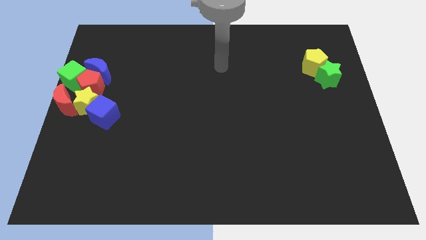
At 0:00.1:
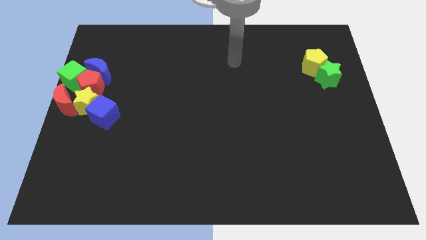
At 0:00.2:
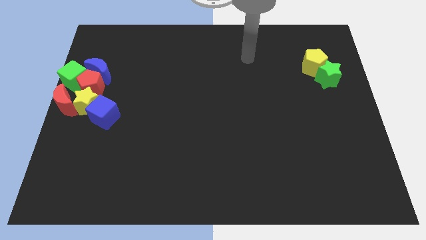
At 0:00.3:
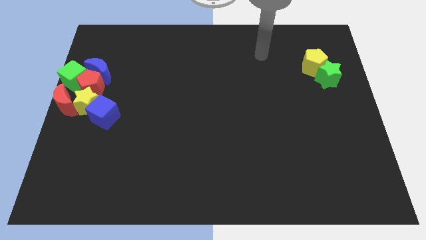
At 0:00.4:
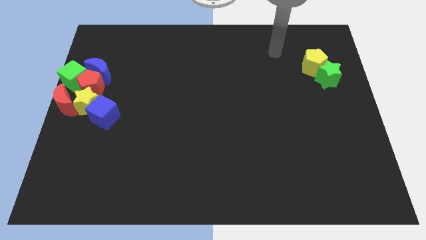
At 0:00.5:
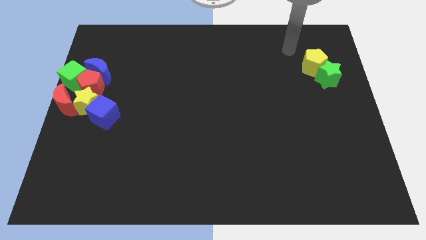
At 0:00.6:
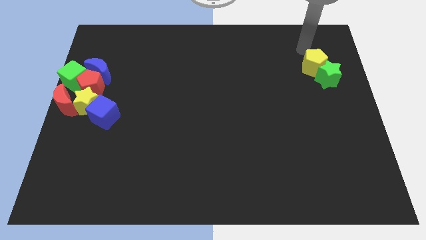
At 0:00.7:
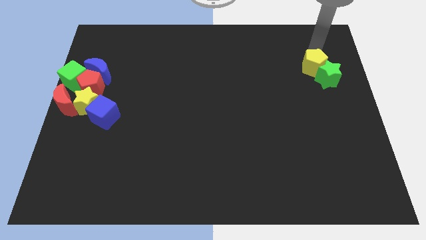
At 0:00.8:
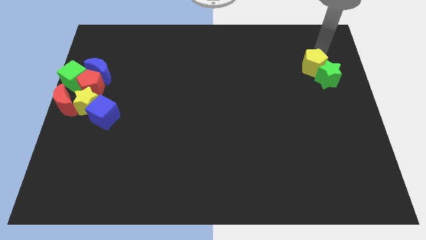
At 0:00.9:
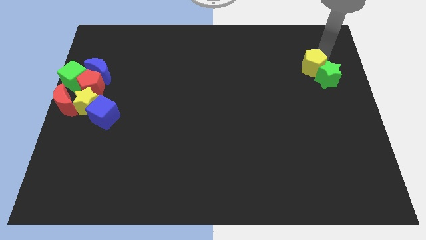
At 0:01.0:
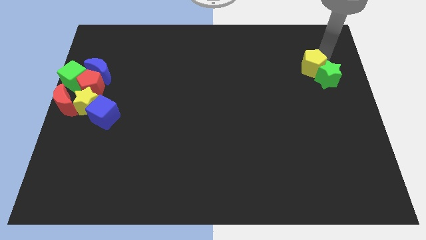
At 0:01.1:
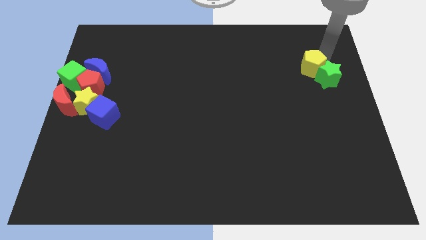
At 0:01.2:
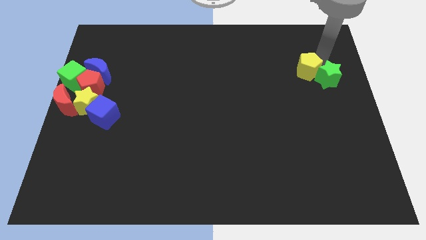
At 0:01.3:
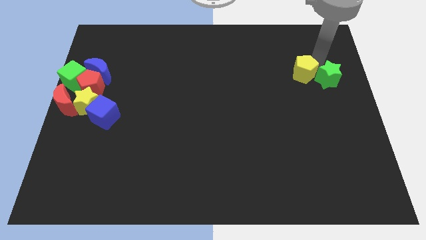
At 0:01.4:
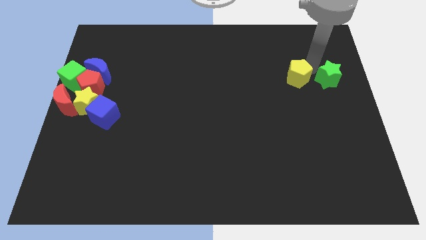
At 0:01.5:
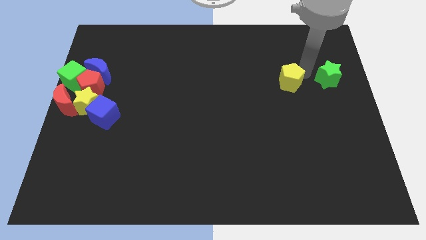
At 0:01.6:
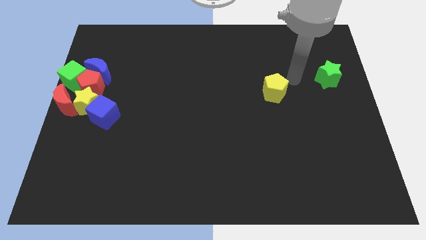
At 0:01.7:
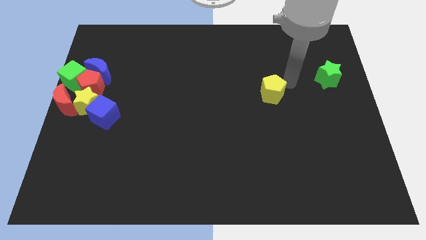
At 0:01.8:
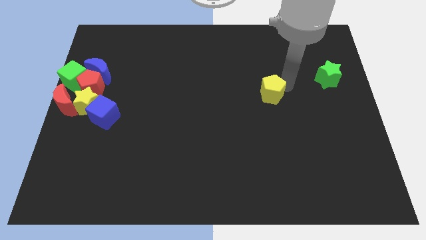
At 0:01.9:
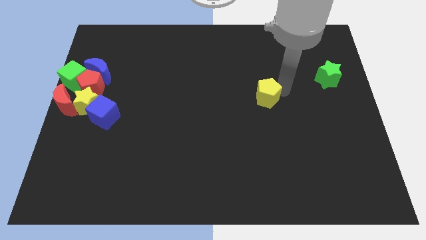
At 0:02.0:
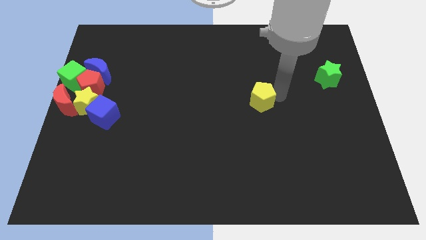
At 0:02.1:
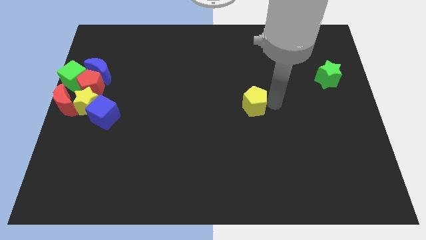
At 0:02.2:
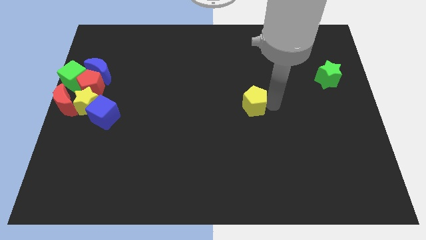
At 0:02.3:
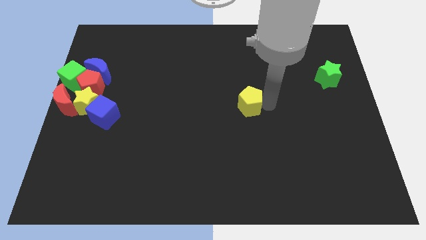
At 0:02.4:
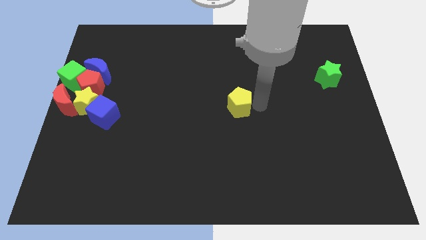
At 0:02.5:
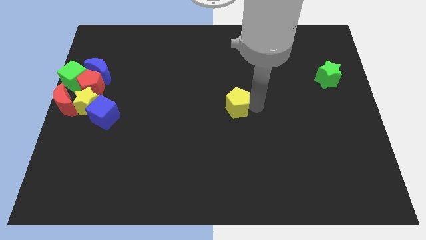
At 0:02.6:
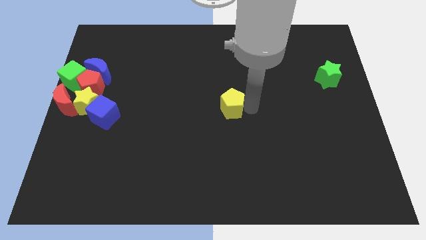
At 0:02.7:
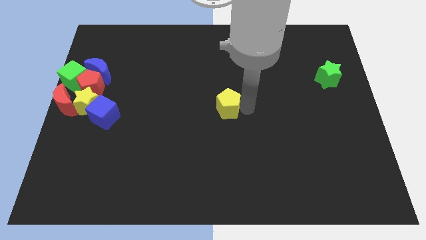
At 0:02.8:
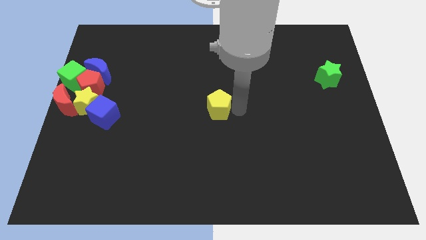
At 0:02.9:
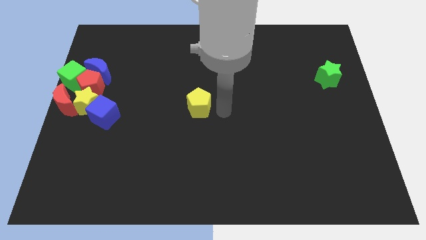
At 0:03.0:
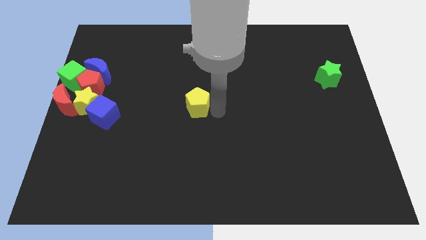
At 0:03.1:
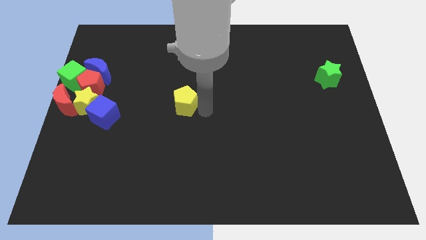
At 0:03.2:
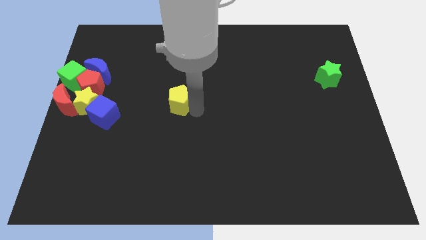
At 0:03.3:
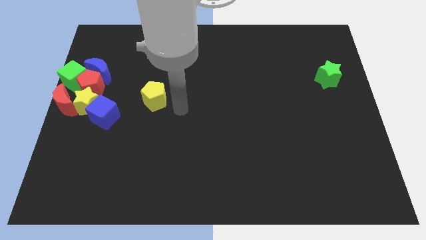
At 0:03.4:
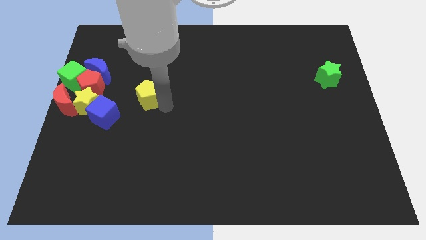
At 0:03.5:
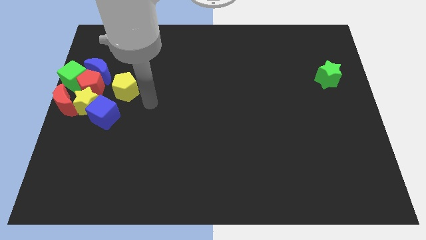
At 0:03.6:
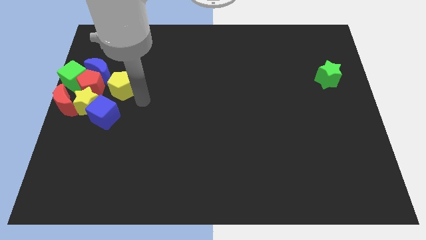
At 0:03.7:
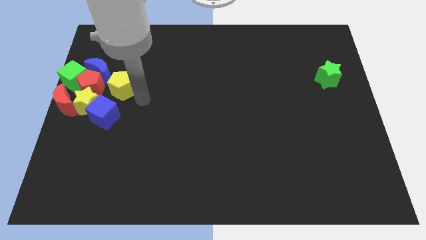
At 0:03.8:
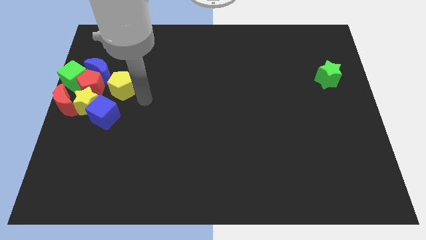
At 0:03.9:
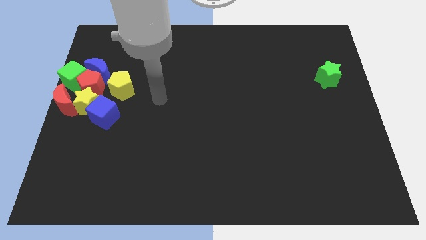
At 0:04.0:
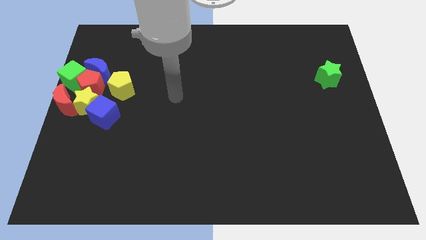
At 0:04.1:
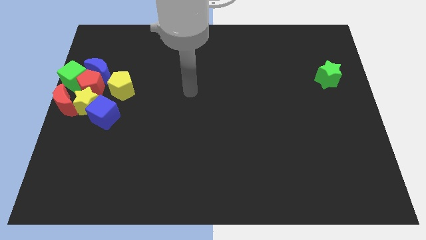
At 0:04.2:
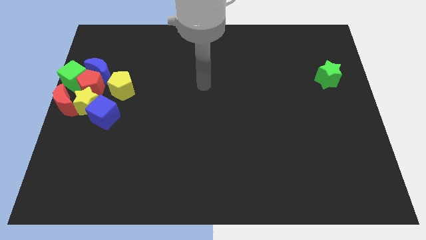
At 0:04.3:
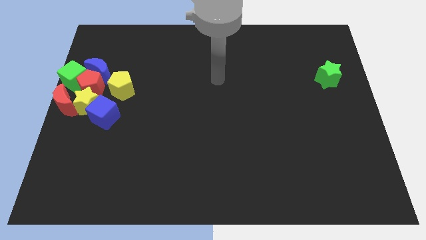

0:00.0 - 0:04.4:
move the yellow pentagon towards the group of objects

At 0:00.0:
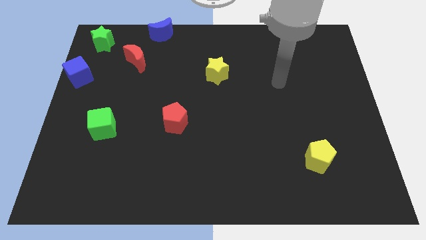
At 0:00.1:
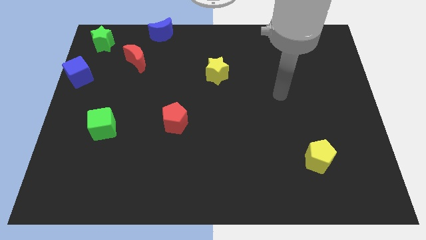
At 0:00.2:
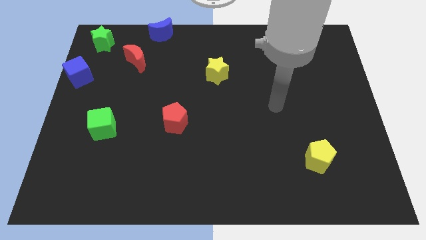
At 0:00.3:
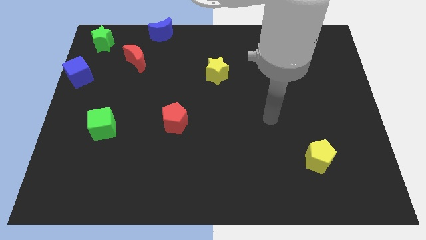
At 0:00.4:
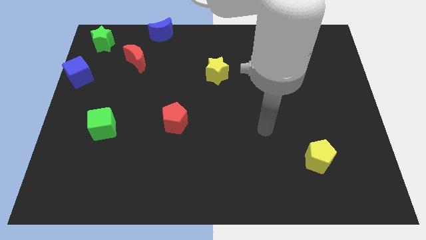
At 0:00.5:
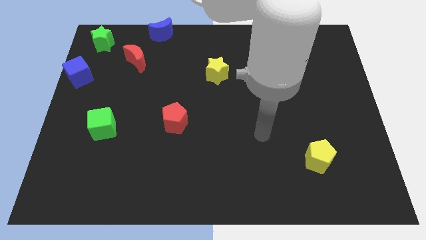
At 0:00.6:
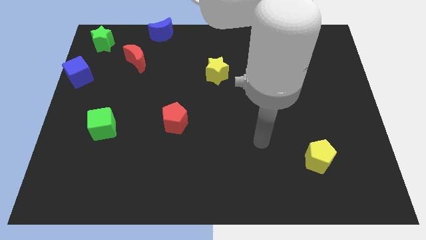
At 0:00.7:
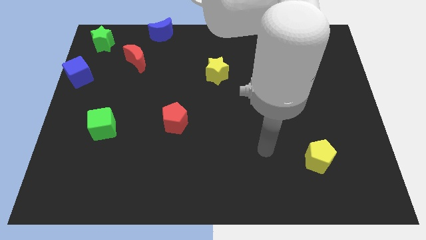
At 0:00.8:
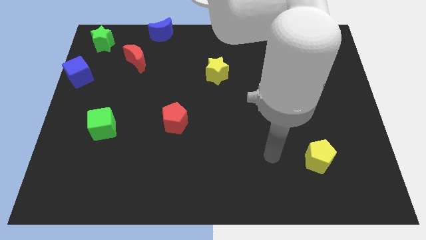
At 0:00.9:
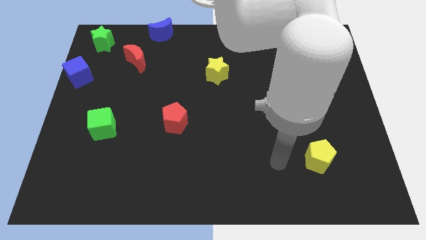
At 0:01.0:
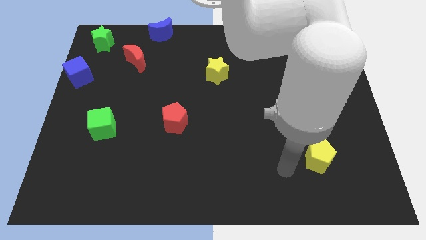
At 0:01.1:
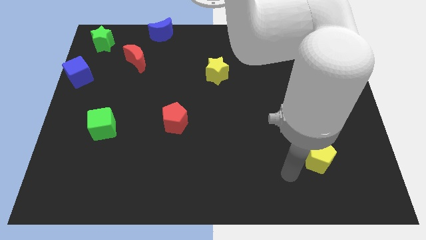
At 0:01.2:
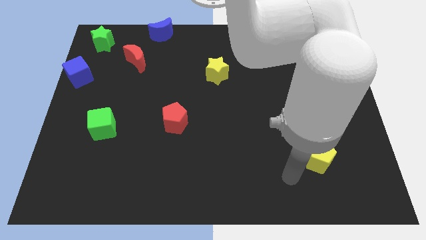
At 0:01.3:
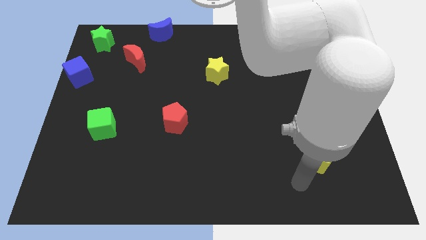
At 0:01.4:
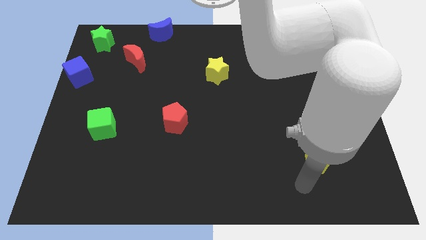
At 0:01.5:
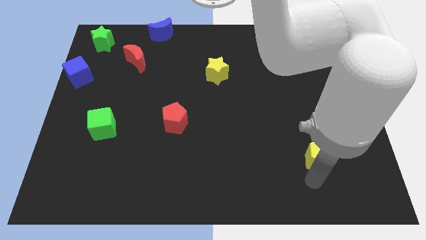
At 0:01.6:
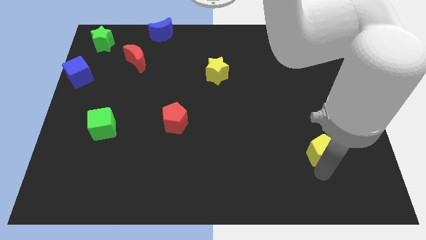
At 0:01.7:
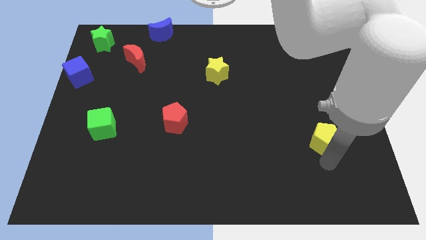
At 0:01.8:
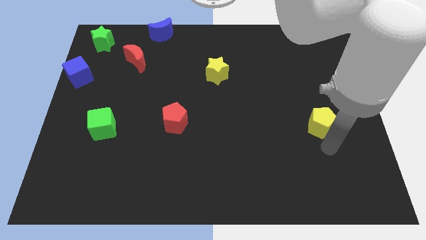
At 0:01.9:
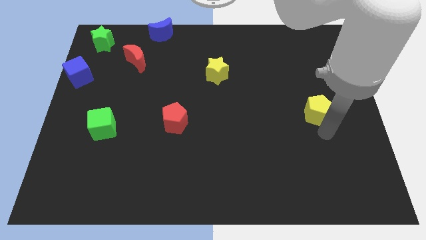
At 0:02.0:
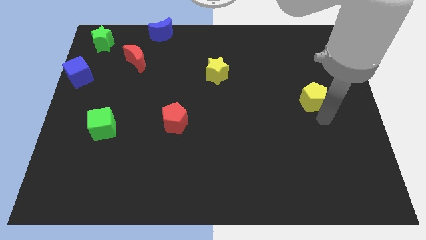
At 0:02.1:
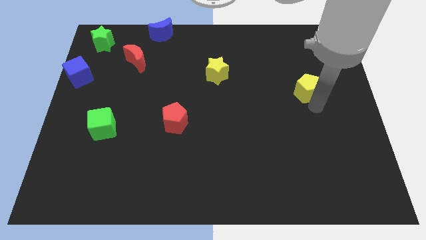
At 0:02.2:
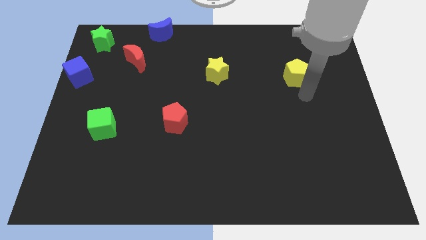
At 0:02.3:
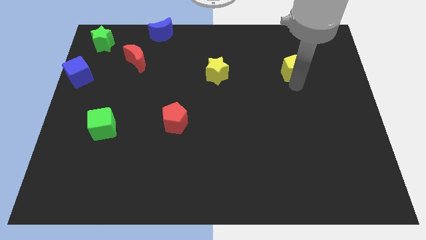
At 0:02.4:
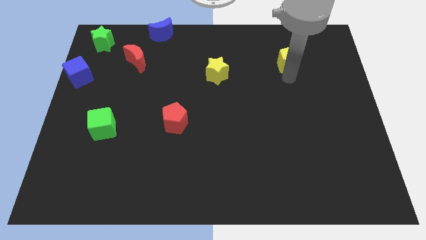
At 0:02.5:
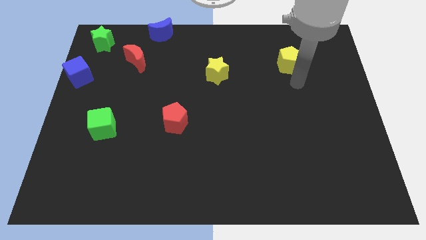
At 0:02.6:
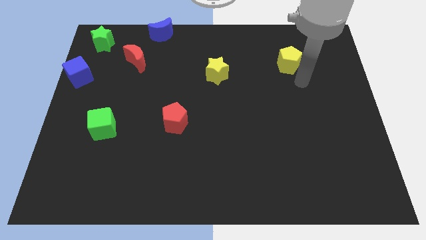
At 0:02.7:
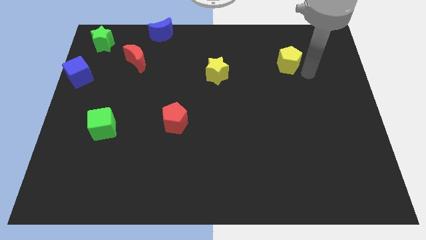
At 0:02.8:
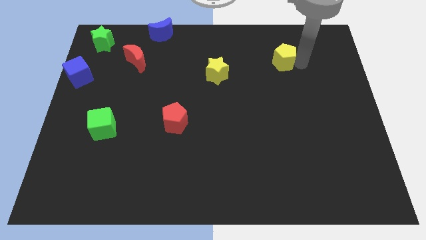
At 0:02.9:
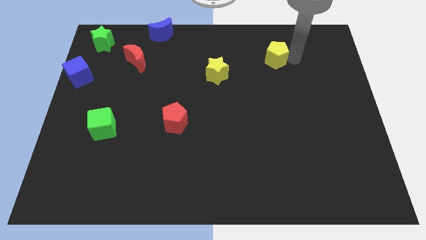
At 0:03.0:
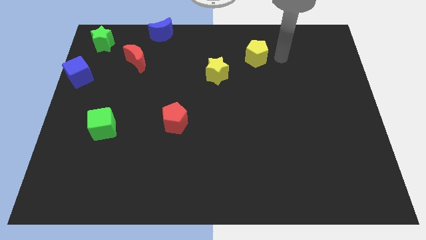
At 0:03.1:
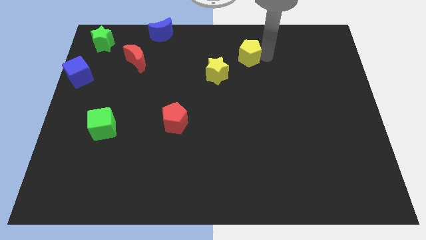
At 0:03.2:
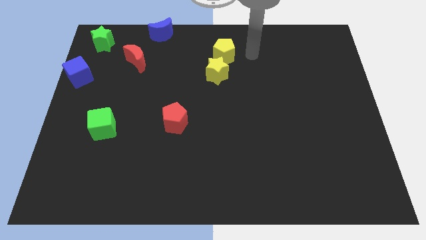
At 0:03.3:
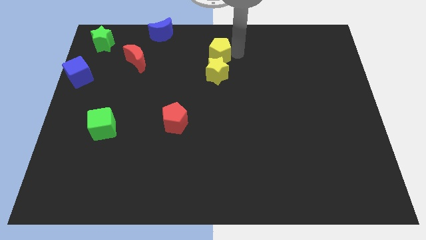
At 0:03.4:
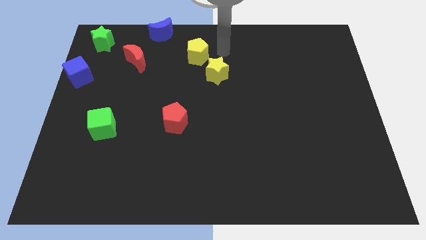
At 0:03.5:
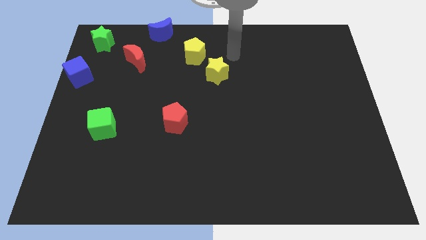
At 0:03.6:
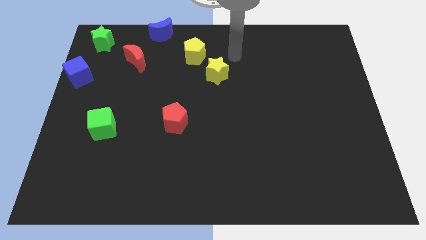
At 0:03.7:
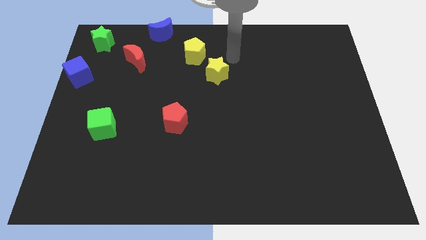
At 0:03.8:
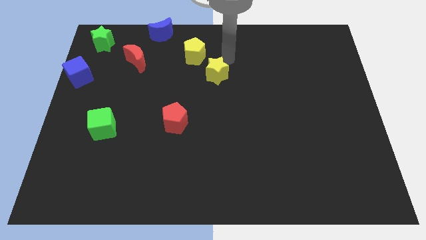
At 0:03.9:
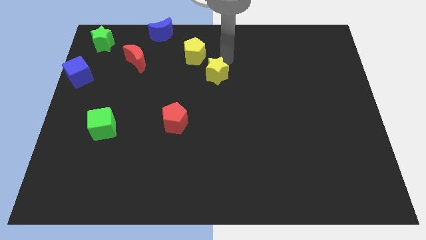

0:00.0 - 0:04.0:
place yellow pentagon to the top left of yellow star

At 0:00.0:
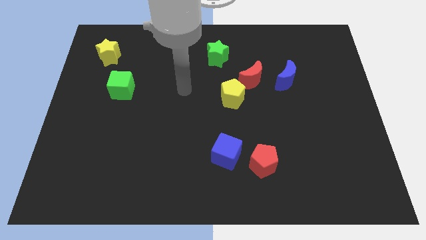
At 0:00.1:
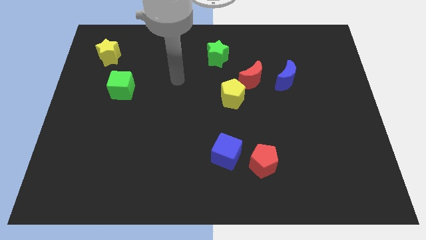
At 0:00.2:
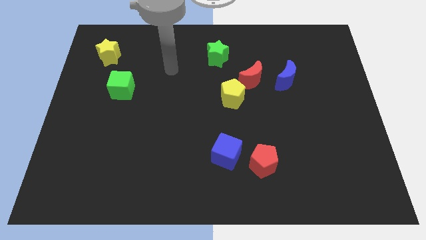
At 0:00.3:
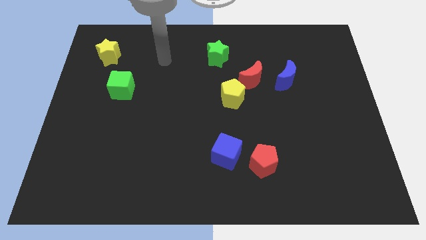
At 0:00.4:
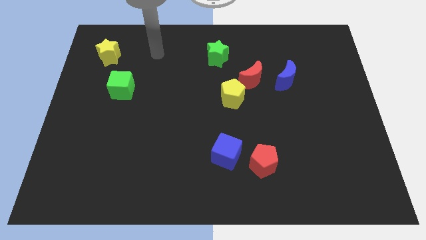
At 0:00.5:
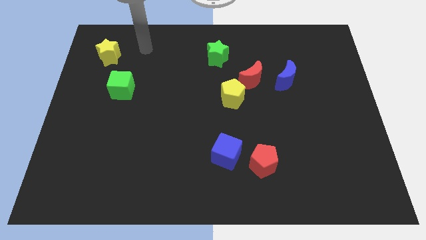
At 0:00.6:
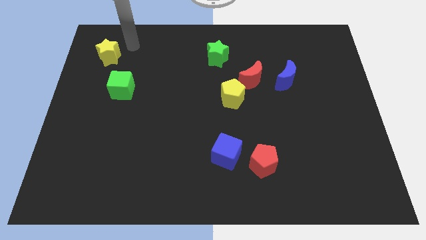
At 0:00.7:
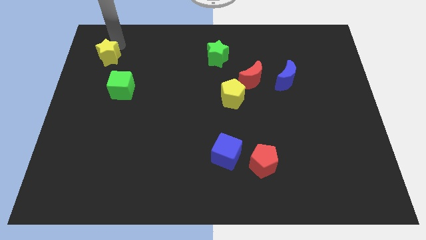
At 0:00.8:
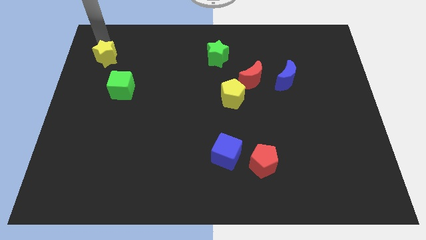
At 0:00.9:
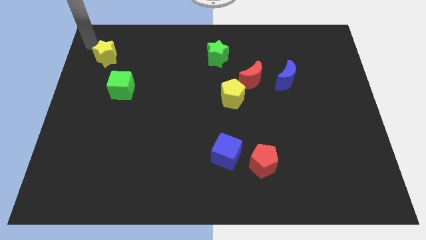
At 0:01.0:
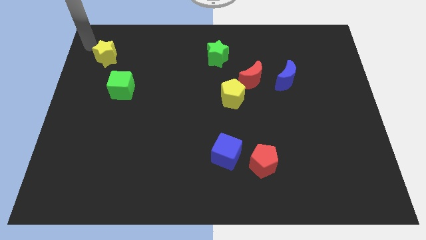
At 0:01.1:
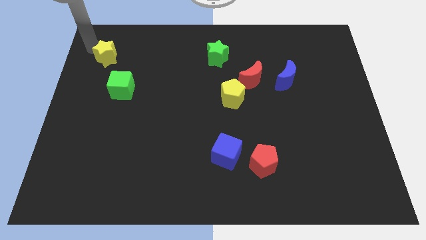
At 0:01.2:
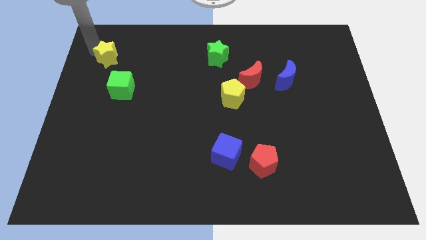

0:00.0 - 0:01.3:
move your arm to the top of the yellow star
